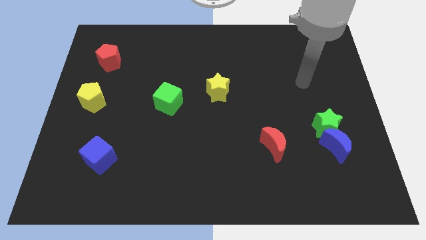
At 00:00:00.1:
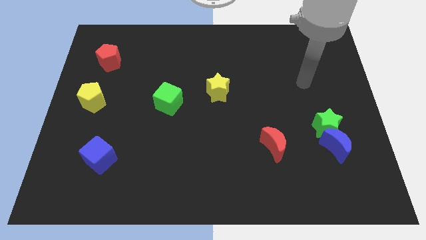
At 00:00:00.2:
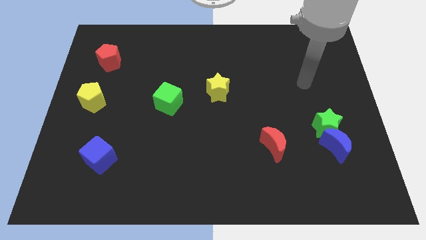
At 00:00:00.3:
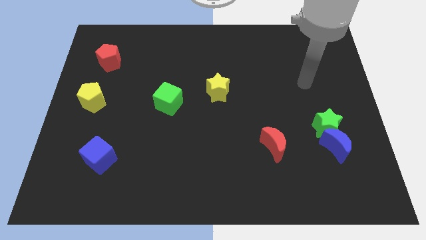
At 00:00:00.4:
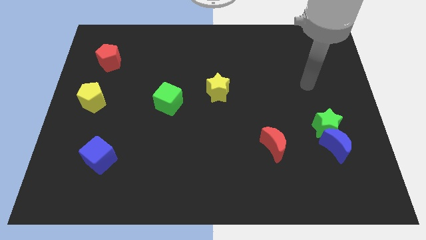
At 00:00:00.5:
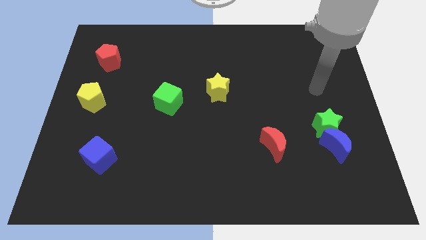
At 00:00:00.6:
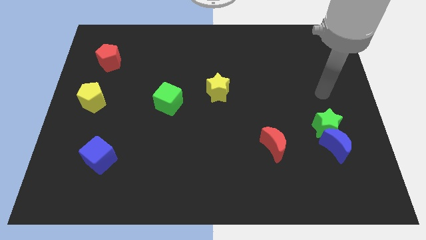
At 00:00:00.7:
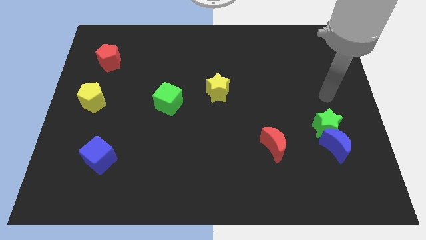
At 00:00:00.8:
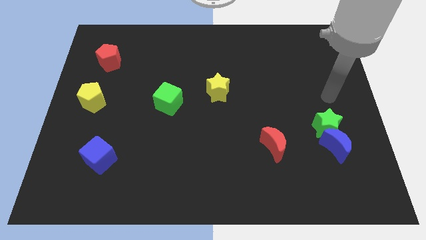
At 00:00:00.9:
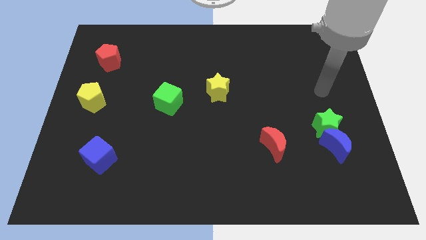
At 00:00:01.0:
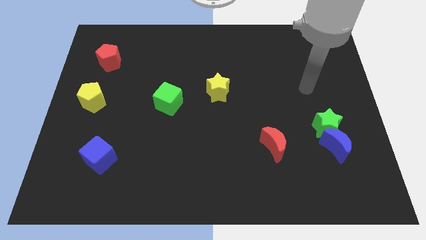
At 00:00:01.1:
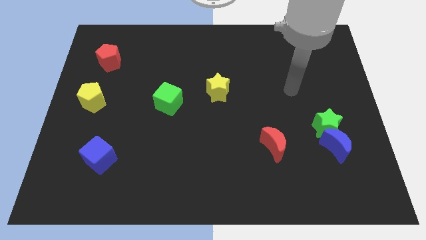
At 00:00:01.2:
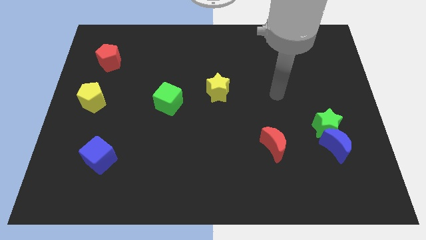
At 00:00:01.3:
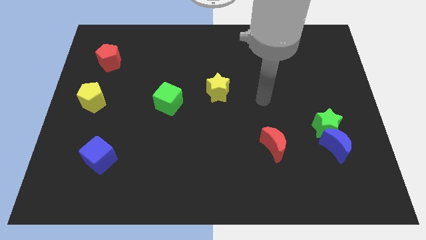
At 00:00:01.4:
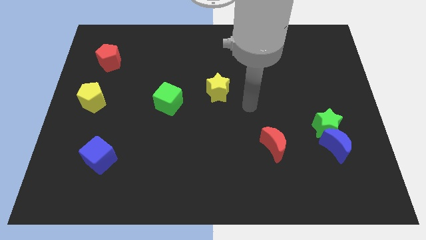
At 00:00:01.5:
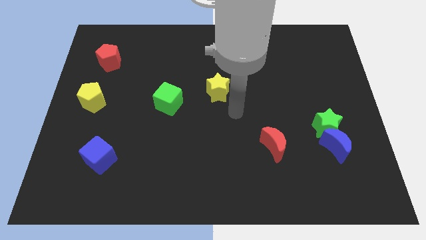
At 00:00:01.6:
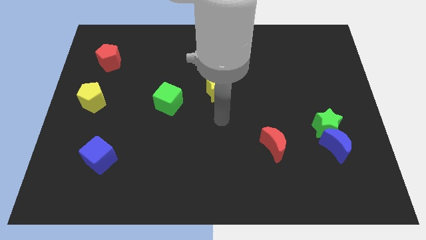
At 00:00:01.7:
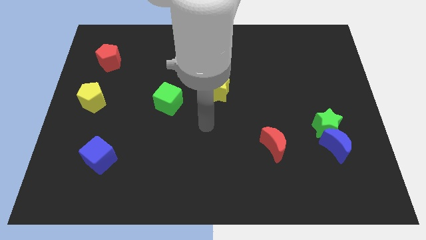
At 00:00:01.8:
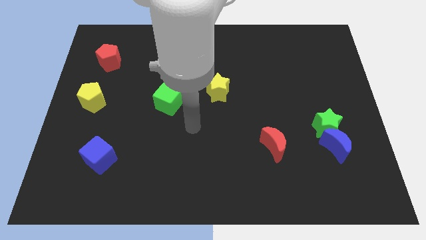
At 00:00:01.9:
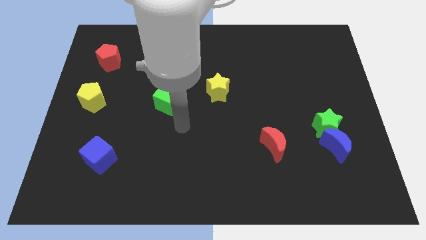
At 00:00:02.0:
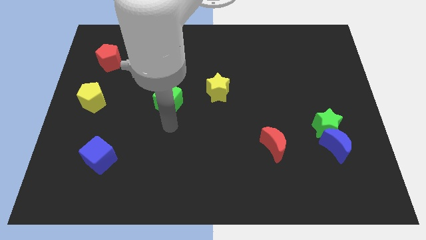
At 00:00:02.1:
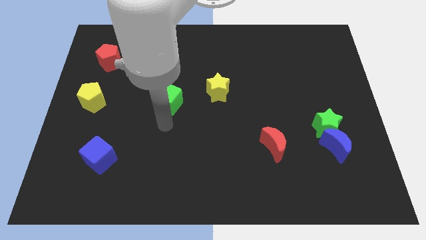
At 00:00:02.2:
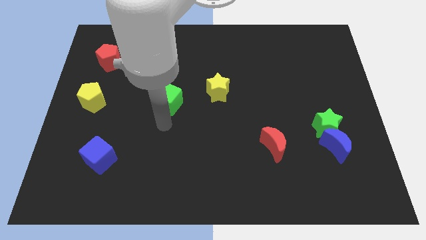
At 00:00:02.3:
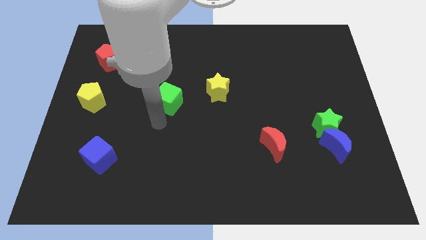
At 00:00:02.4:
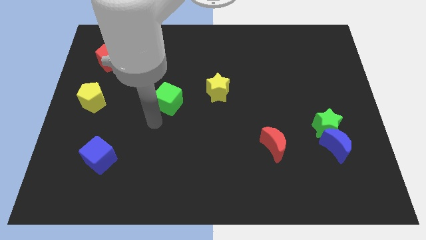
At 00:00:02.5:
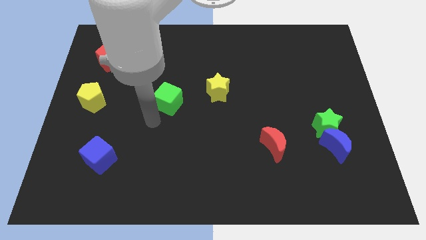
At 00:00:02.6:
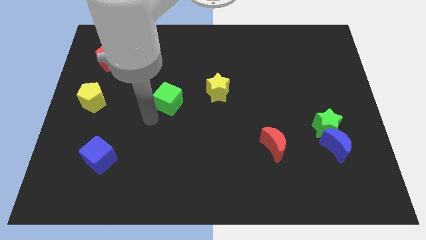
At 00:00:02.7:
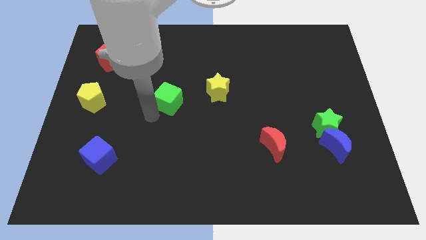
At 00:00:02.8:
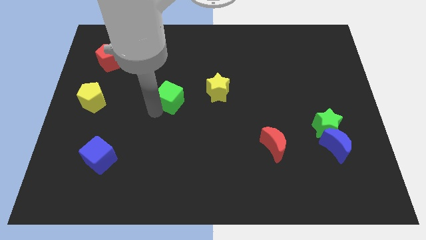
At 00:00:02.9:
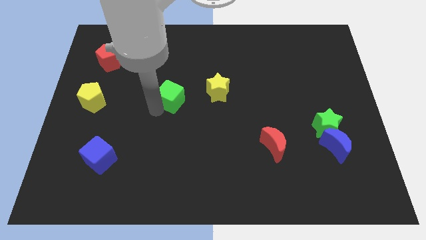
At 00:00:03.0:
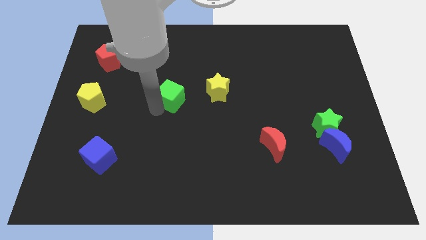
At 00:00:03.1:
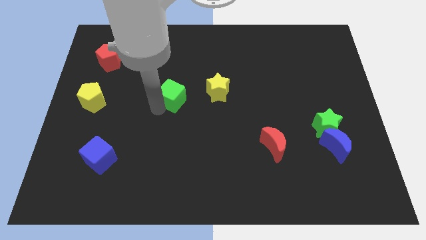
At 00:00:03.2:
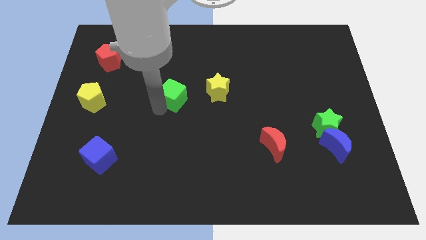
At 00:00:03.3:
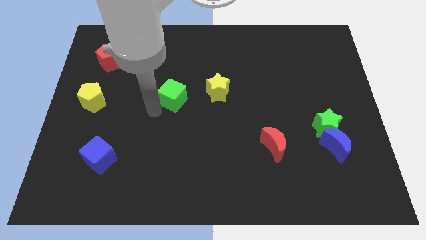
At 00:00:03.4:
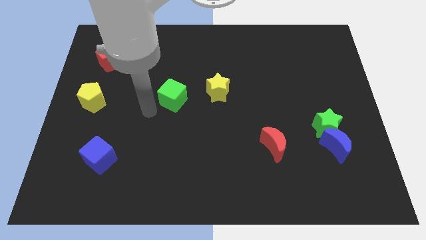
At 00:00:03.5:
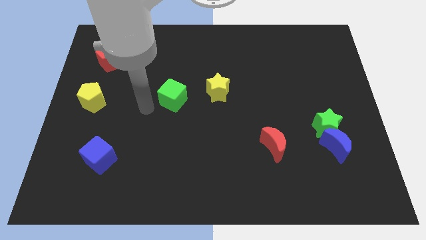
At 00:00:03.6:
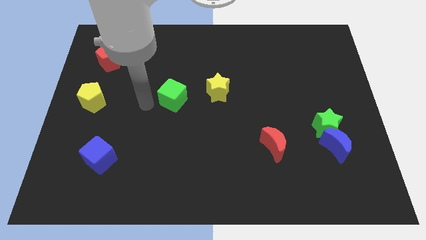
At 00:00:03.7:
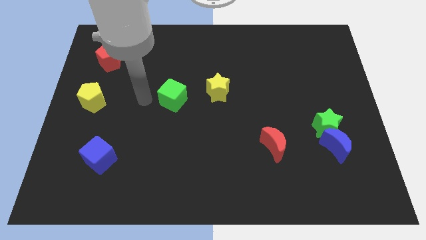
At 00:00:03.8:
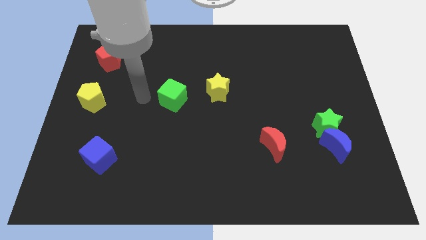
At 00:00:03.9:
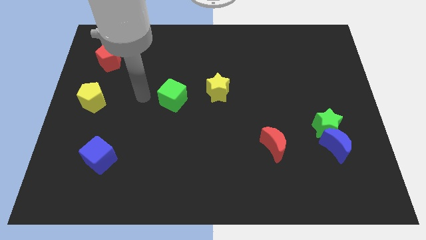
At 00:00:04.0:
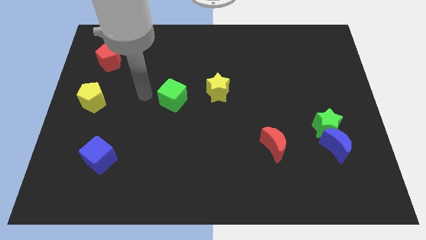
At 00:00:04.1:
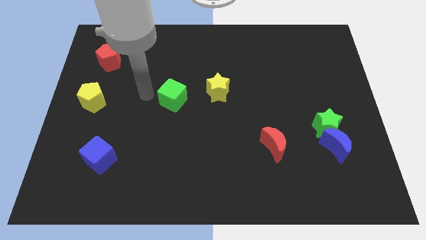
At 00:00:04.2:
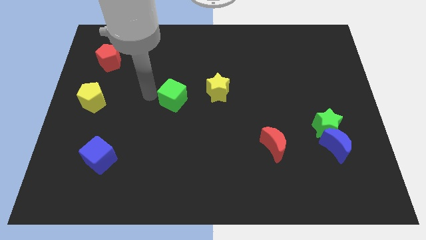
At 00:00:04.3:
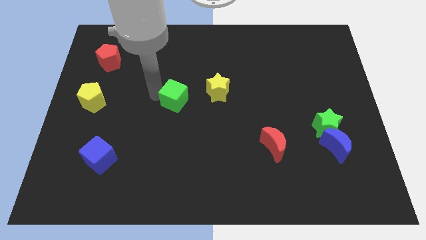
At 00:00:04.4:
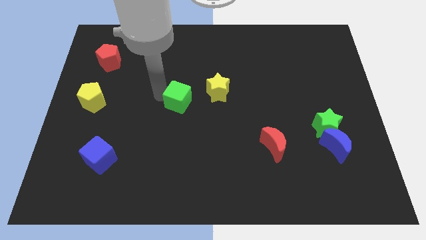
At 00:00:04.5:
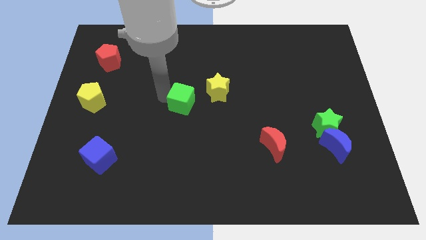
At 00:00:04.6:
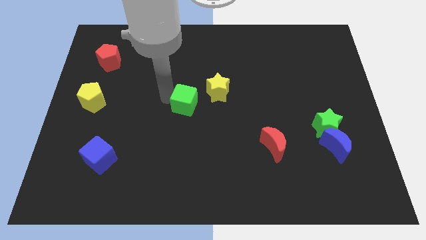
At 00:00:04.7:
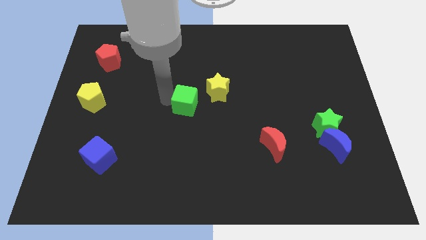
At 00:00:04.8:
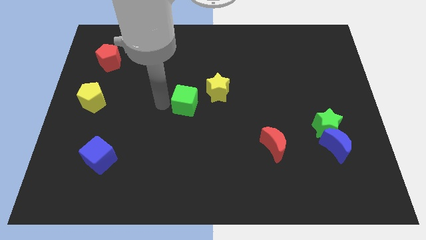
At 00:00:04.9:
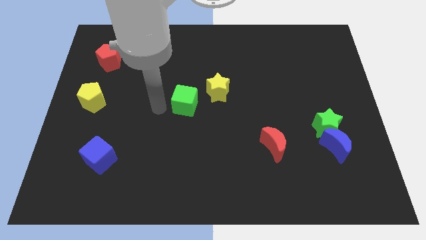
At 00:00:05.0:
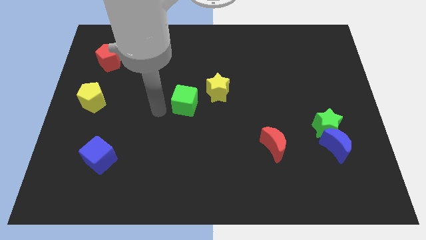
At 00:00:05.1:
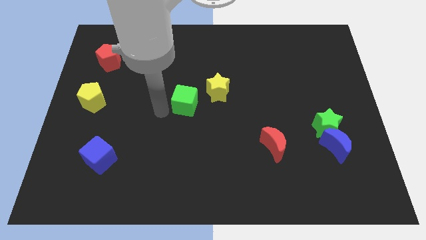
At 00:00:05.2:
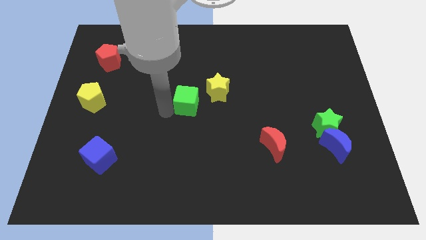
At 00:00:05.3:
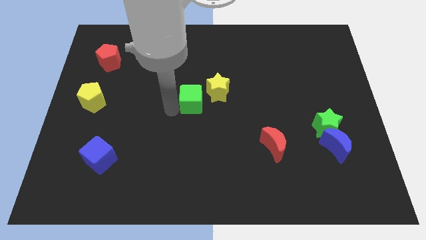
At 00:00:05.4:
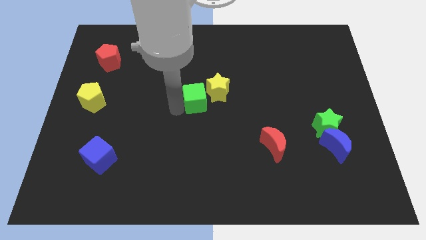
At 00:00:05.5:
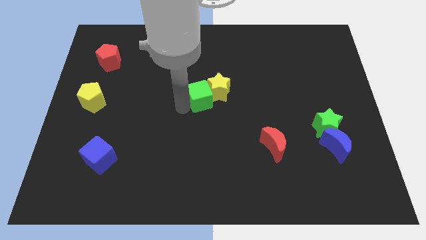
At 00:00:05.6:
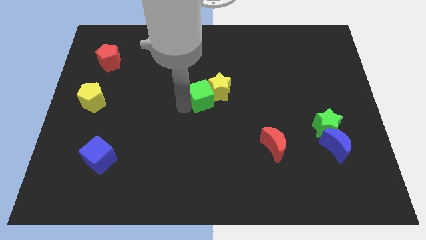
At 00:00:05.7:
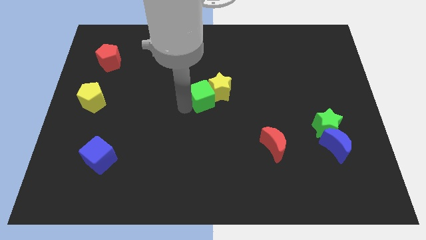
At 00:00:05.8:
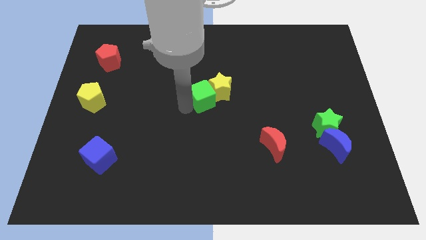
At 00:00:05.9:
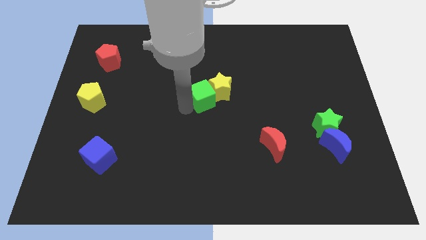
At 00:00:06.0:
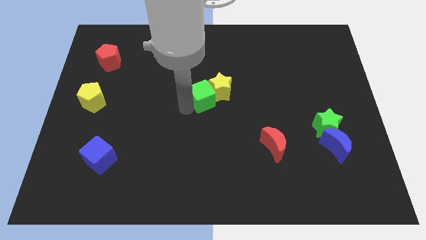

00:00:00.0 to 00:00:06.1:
push the green cube into the yellow star

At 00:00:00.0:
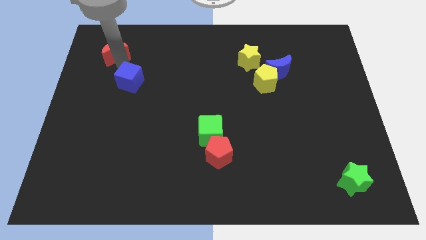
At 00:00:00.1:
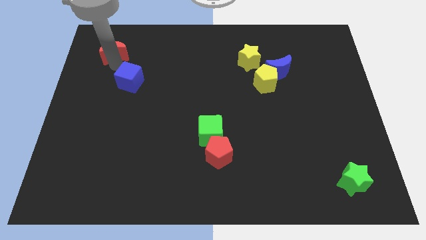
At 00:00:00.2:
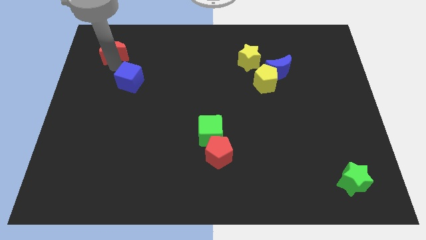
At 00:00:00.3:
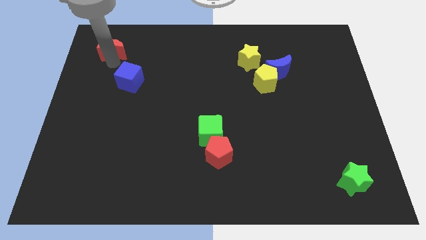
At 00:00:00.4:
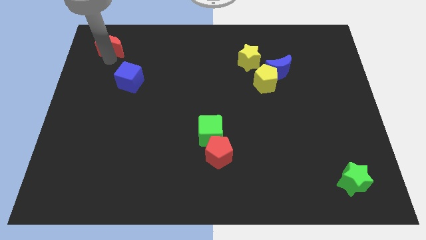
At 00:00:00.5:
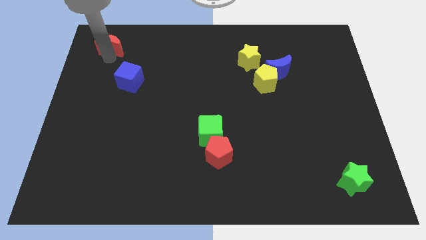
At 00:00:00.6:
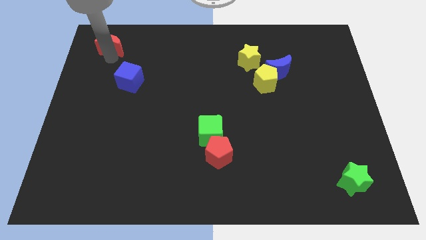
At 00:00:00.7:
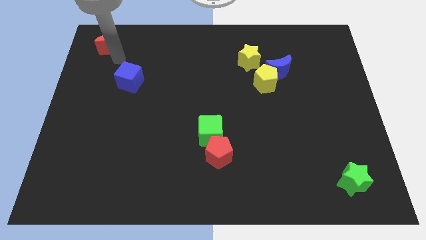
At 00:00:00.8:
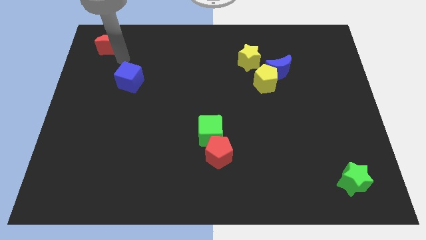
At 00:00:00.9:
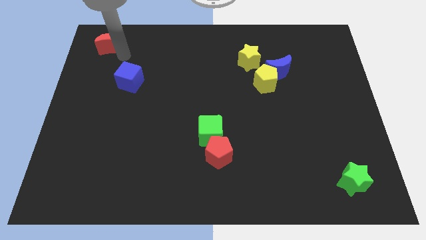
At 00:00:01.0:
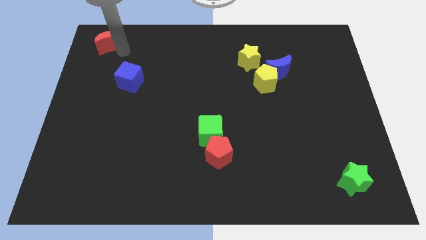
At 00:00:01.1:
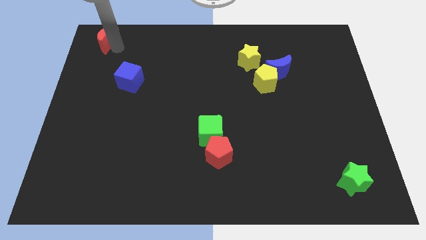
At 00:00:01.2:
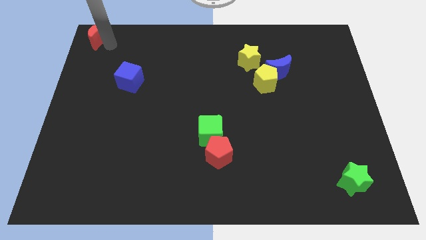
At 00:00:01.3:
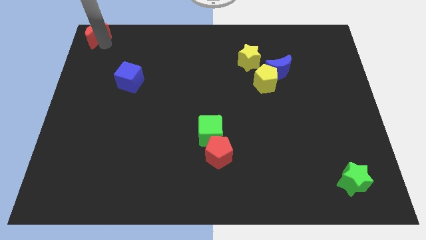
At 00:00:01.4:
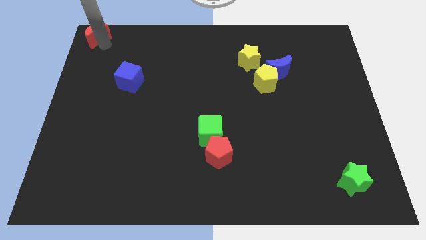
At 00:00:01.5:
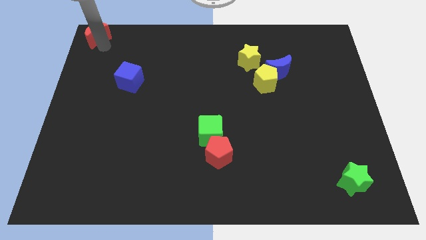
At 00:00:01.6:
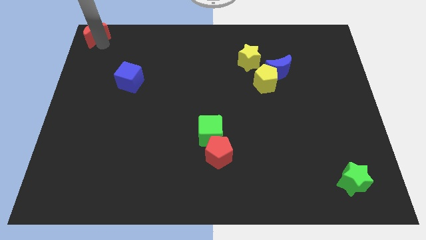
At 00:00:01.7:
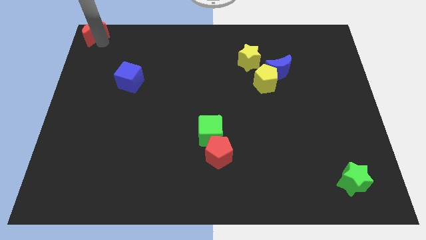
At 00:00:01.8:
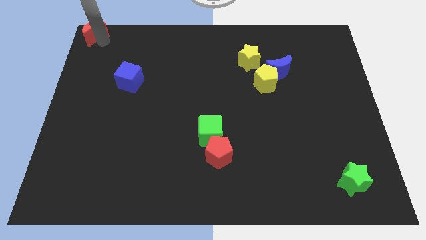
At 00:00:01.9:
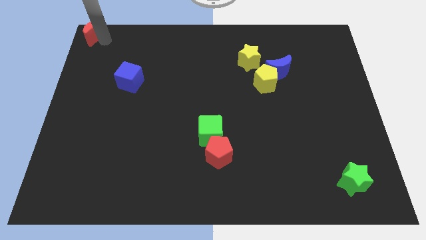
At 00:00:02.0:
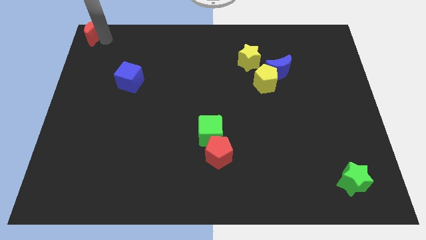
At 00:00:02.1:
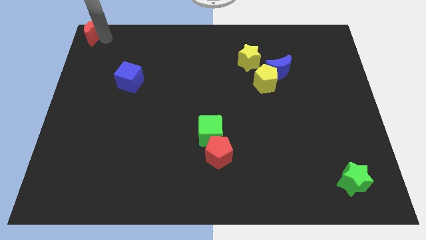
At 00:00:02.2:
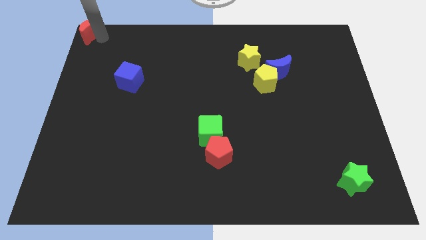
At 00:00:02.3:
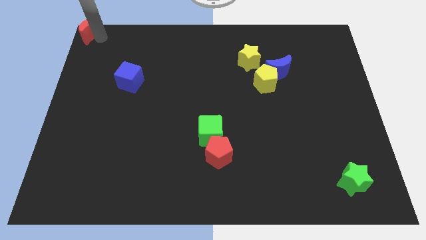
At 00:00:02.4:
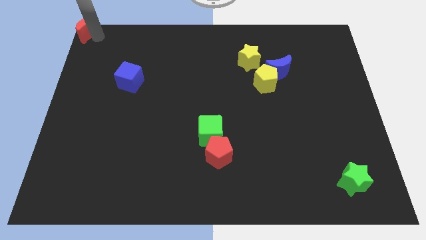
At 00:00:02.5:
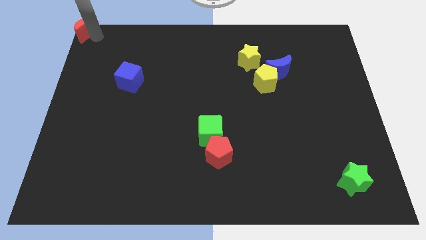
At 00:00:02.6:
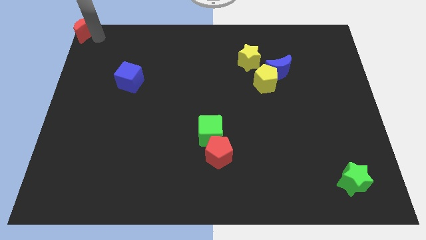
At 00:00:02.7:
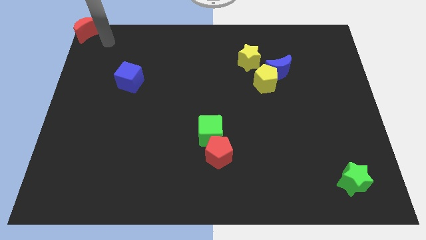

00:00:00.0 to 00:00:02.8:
push the red crescent to the top left of the board
